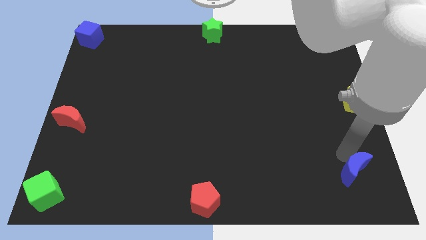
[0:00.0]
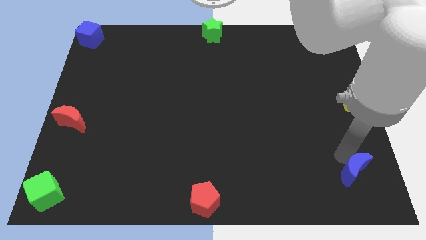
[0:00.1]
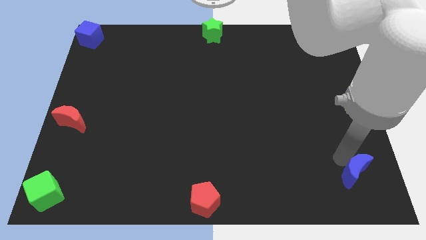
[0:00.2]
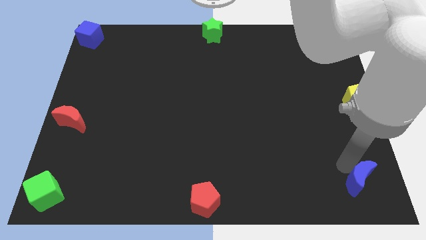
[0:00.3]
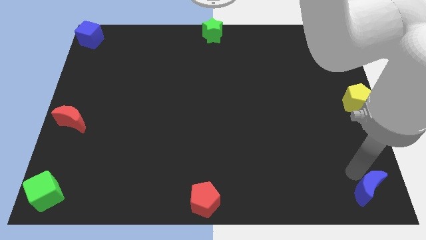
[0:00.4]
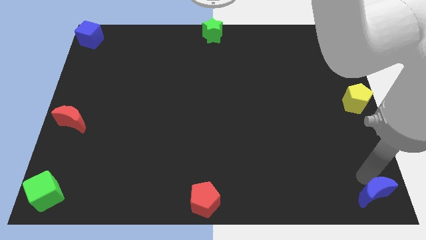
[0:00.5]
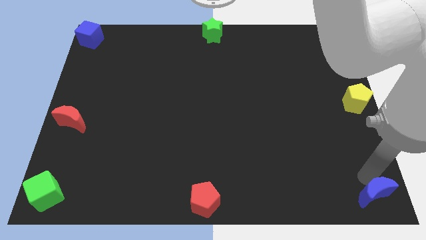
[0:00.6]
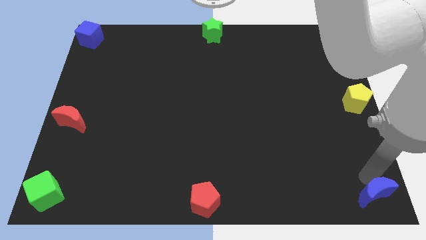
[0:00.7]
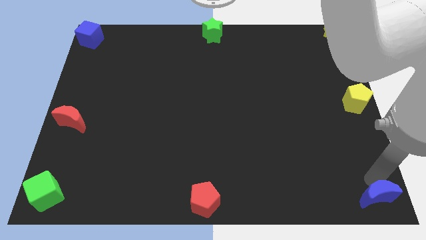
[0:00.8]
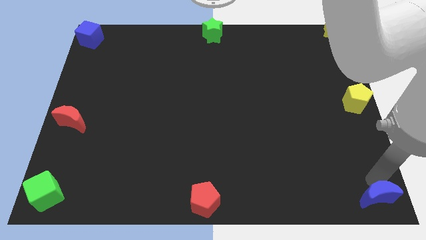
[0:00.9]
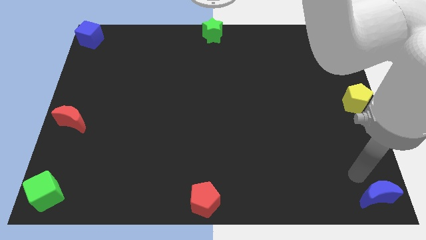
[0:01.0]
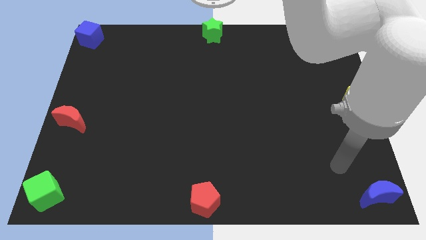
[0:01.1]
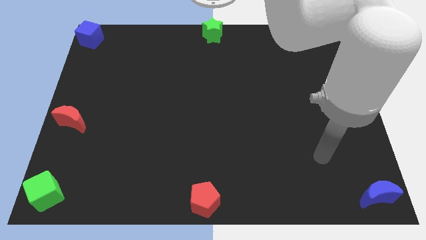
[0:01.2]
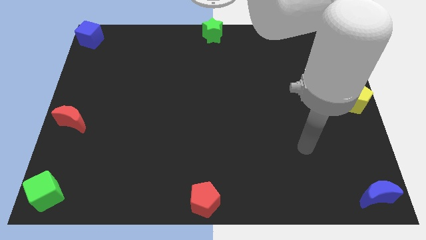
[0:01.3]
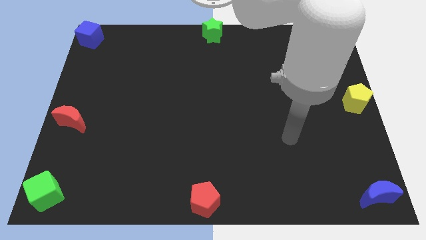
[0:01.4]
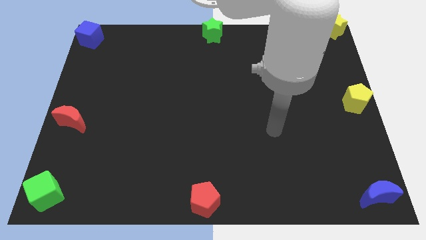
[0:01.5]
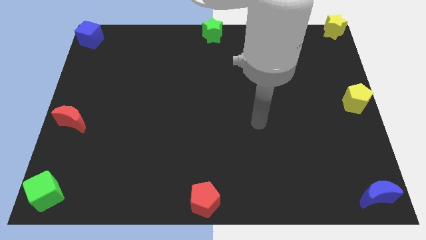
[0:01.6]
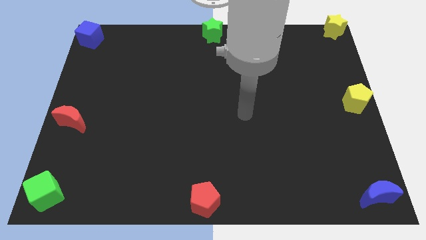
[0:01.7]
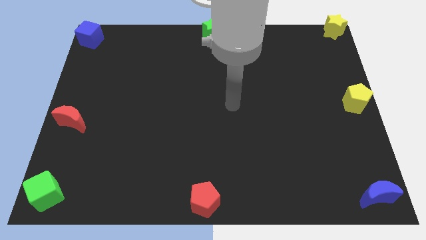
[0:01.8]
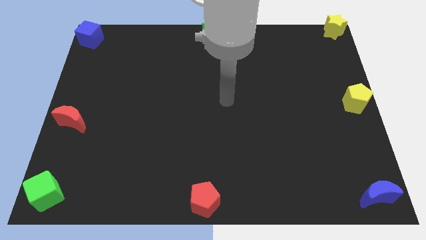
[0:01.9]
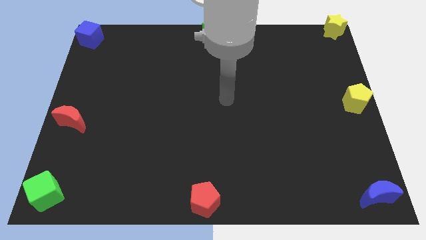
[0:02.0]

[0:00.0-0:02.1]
push the blue crescent at the bottom right corner

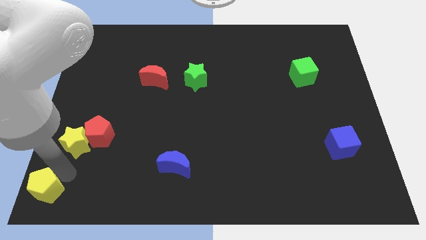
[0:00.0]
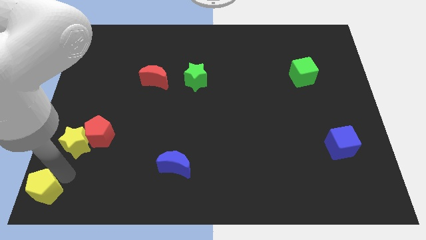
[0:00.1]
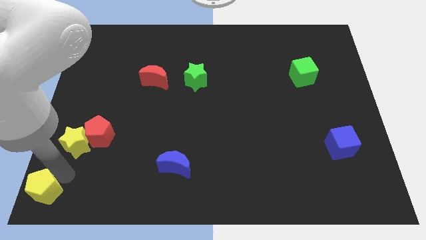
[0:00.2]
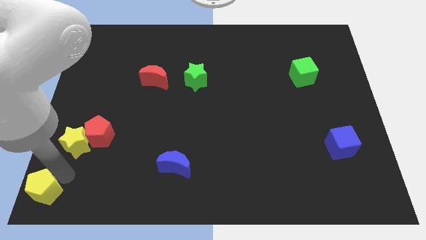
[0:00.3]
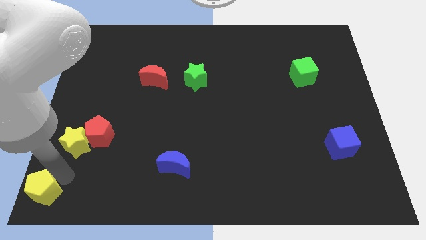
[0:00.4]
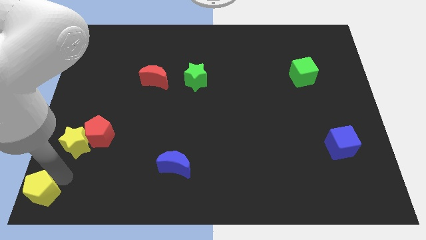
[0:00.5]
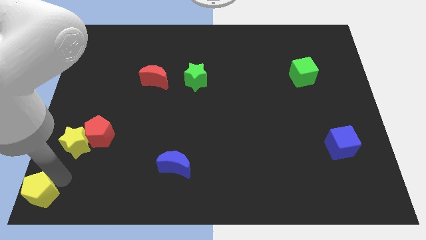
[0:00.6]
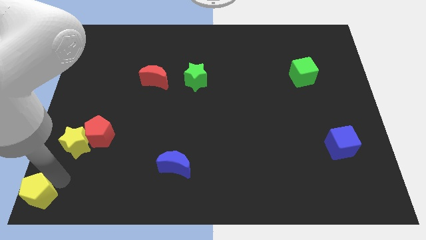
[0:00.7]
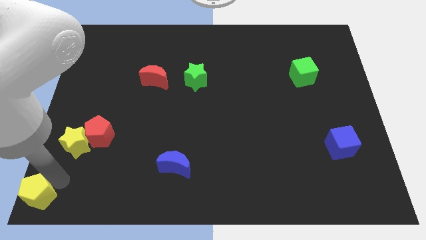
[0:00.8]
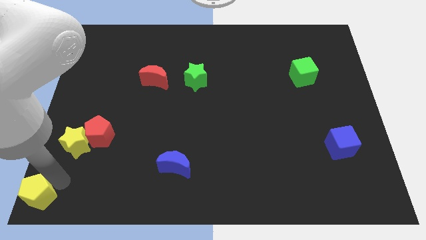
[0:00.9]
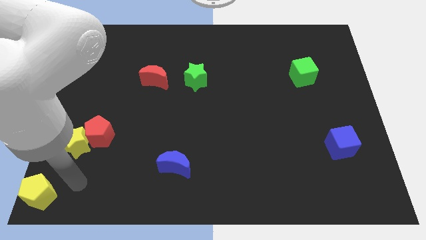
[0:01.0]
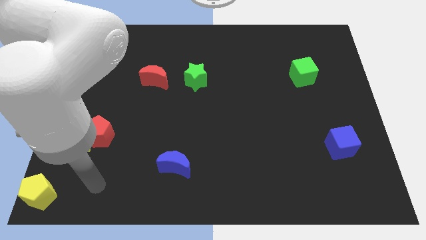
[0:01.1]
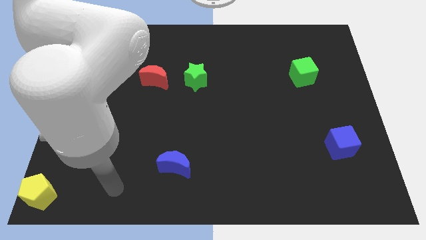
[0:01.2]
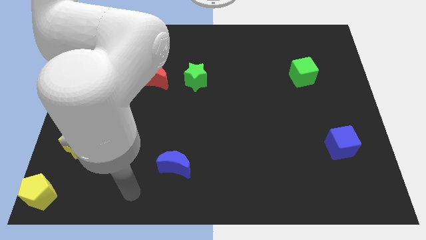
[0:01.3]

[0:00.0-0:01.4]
move the yellow pentagon to the bottom left corner of the board

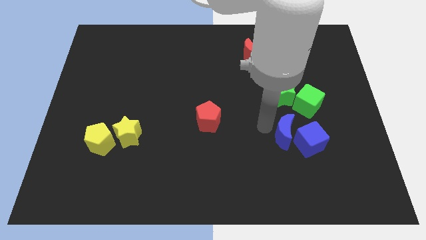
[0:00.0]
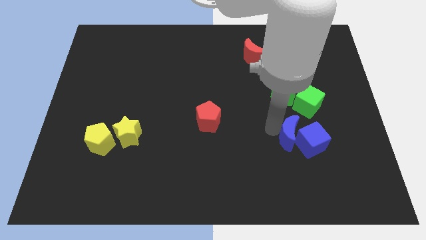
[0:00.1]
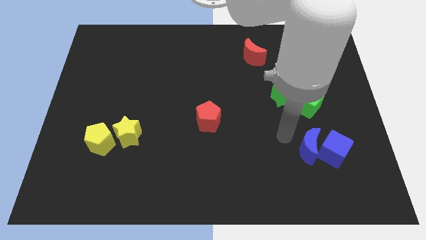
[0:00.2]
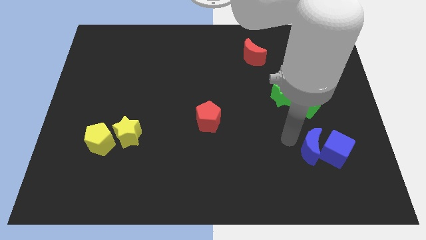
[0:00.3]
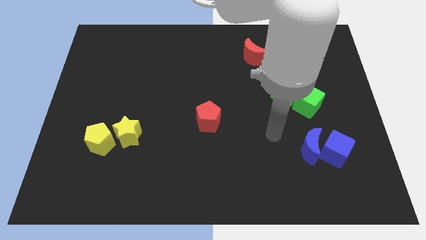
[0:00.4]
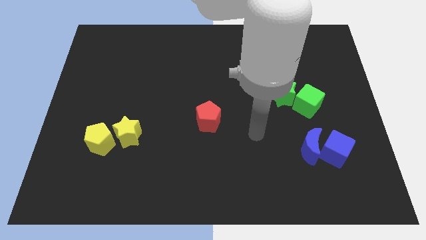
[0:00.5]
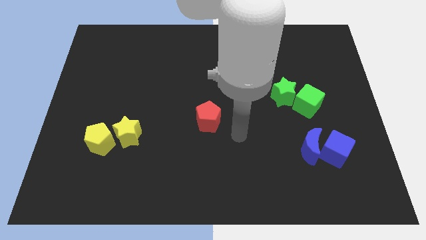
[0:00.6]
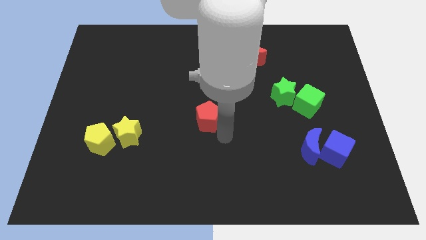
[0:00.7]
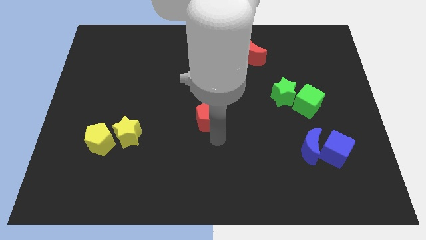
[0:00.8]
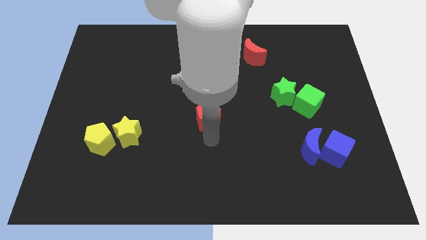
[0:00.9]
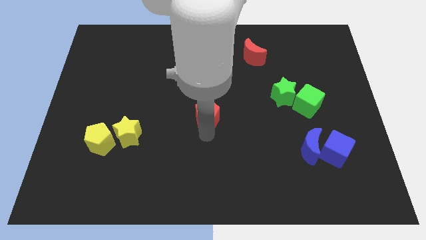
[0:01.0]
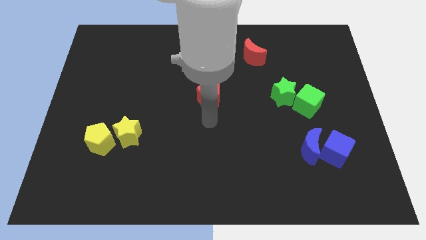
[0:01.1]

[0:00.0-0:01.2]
move the blue crescentblue cube towards the right side of the board

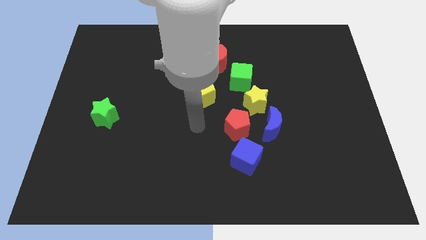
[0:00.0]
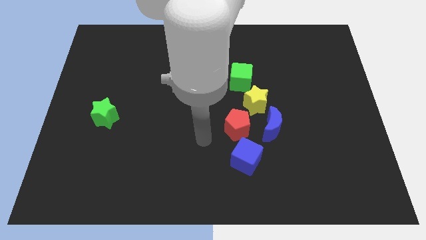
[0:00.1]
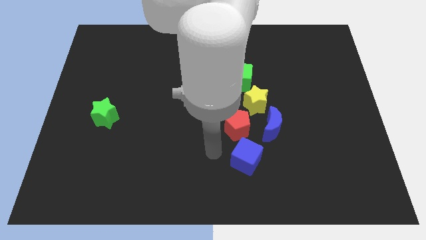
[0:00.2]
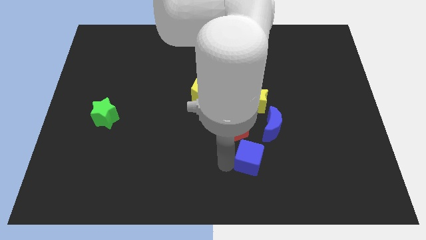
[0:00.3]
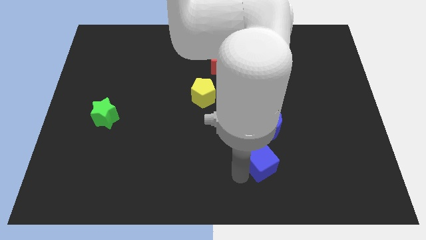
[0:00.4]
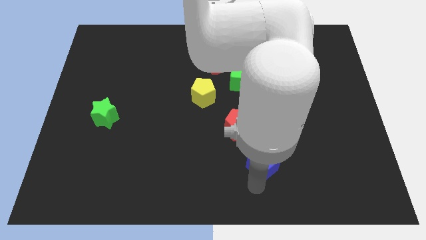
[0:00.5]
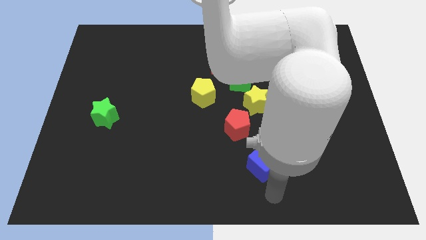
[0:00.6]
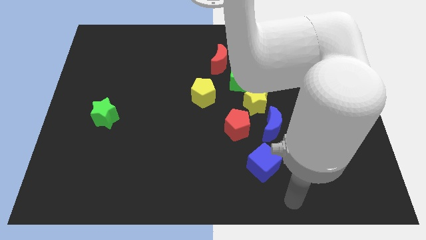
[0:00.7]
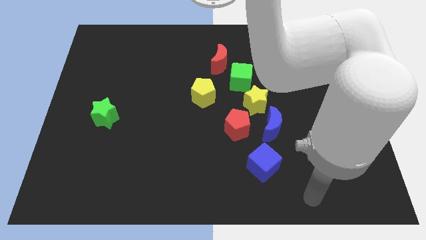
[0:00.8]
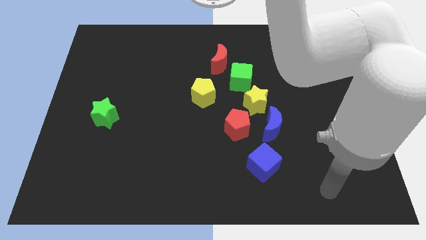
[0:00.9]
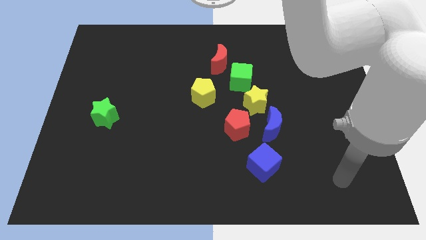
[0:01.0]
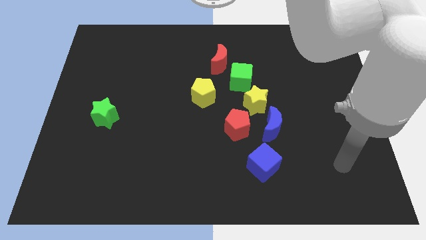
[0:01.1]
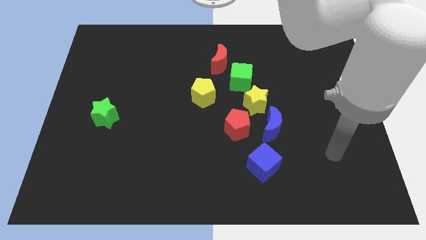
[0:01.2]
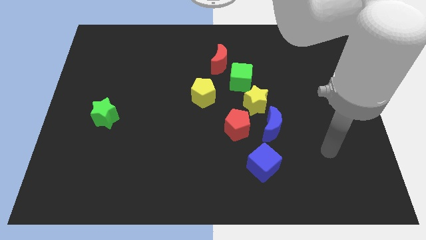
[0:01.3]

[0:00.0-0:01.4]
move the blue cube to the bottom right side of the red pentagon

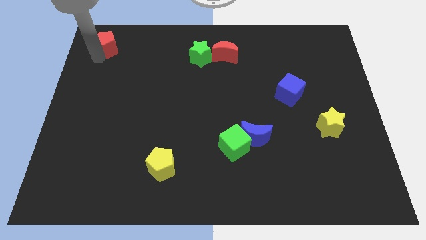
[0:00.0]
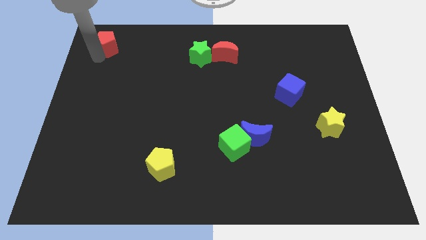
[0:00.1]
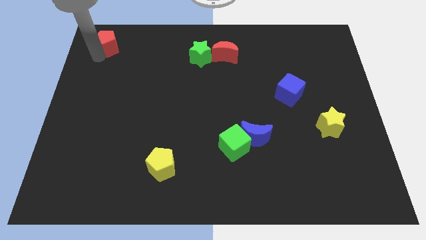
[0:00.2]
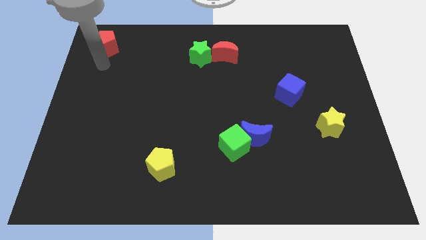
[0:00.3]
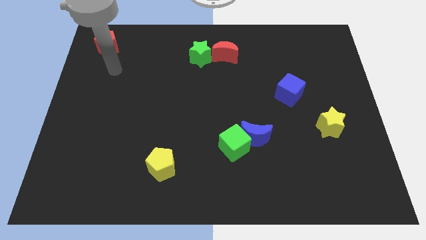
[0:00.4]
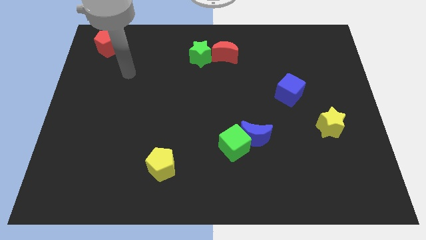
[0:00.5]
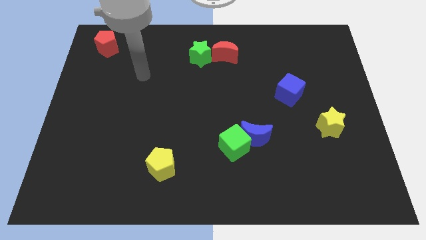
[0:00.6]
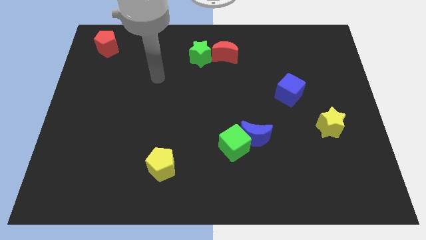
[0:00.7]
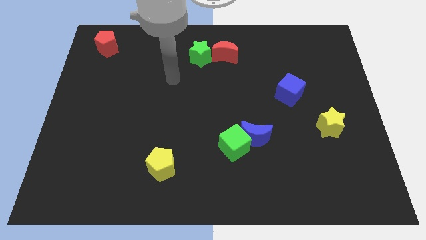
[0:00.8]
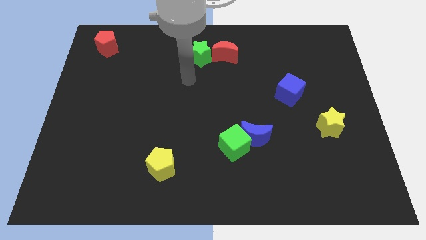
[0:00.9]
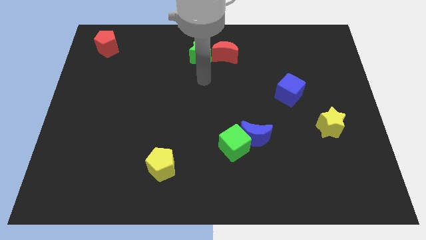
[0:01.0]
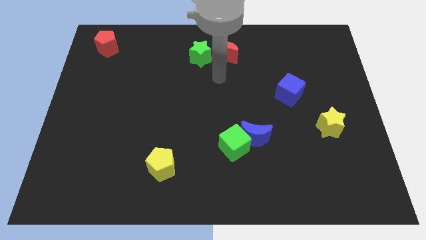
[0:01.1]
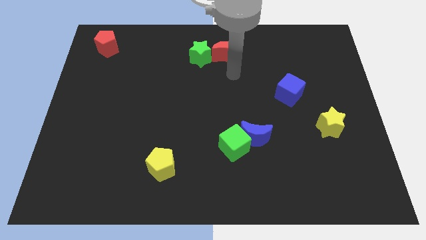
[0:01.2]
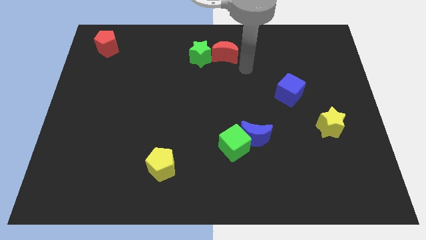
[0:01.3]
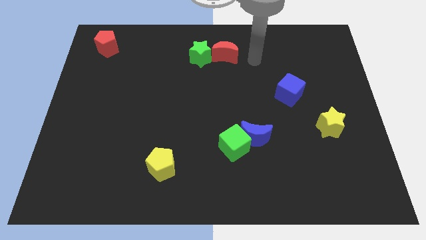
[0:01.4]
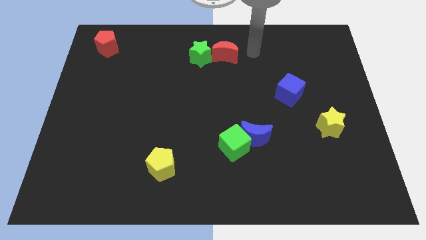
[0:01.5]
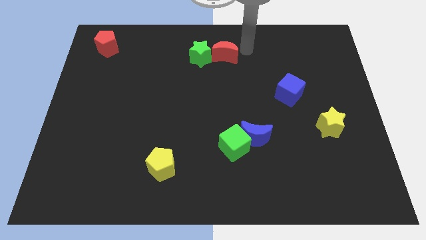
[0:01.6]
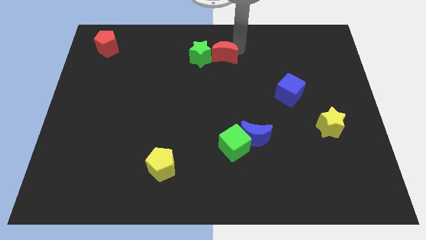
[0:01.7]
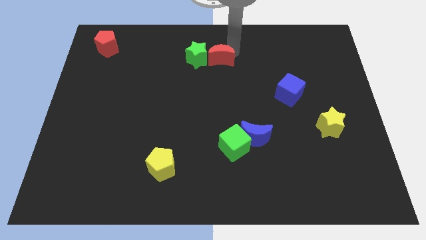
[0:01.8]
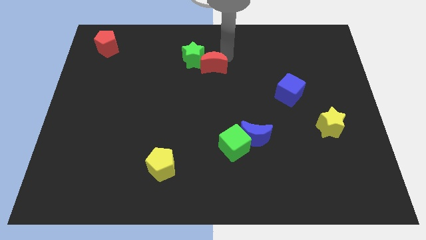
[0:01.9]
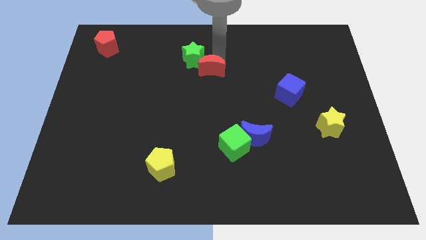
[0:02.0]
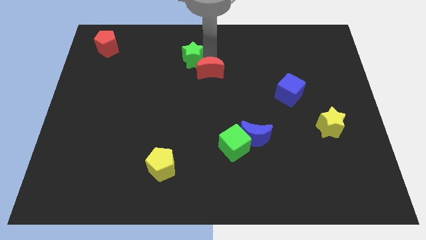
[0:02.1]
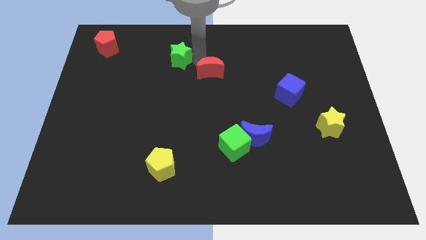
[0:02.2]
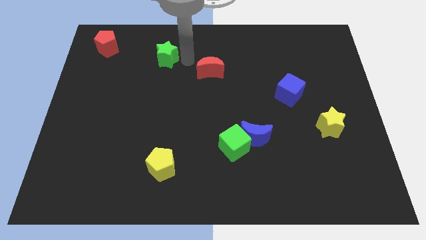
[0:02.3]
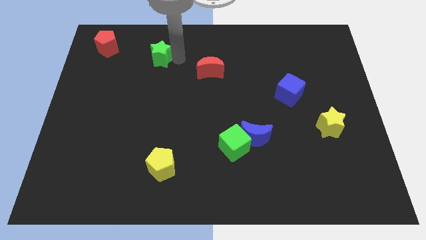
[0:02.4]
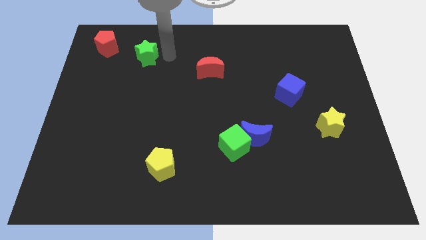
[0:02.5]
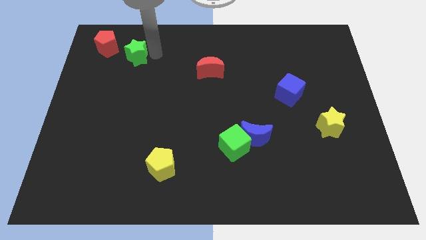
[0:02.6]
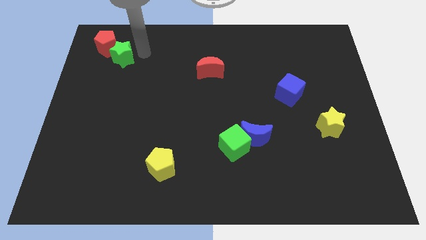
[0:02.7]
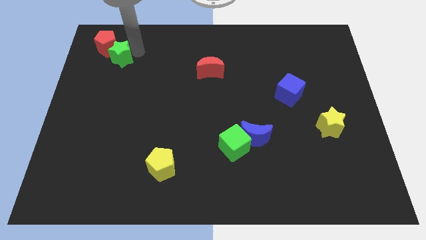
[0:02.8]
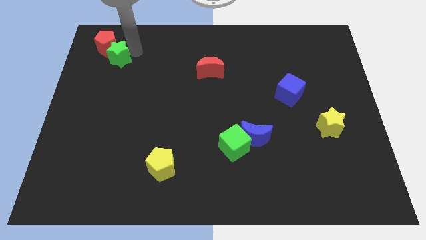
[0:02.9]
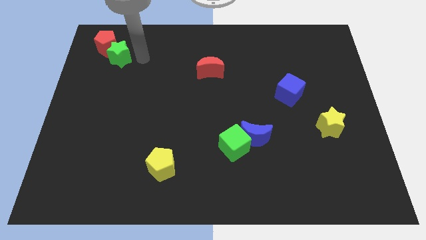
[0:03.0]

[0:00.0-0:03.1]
move the green star close to the red pentagon
